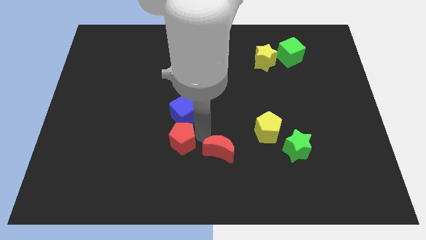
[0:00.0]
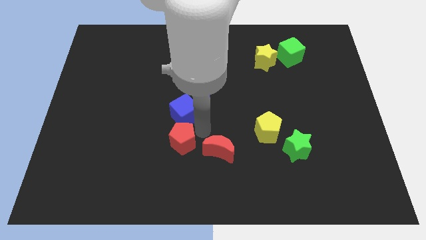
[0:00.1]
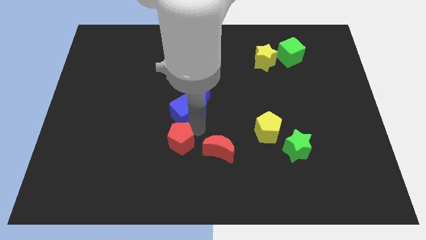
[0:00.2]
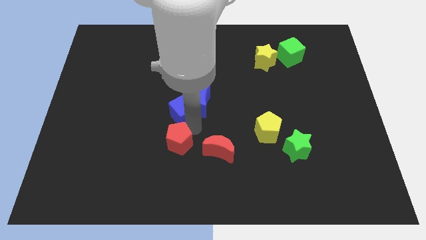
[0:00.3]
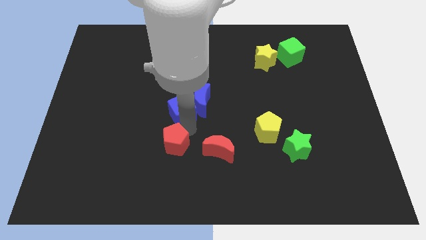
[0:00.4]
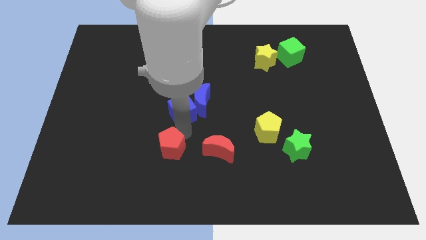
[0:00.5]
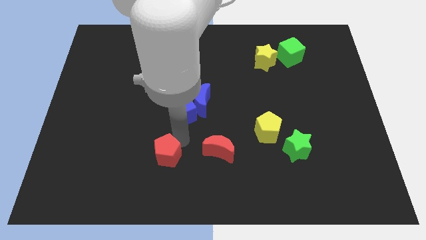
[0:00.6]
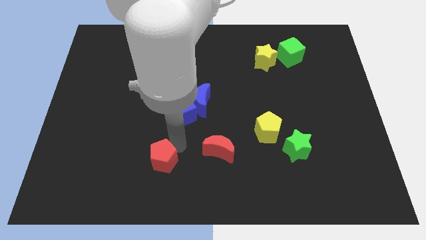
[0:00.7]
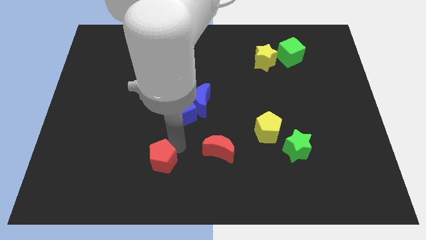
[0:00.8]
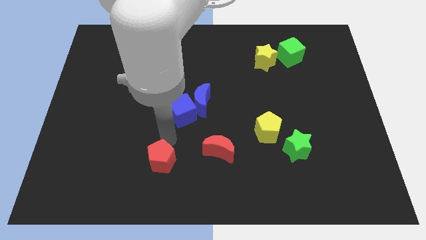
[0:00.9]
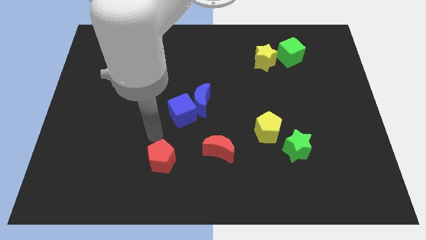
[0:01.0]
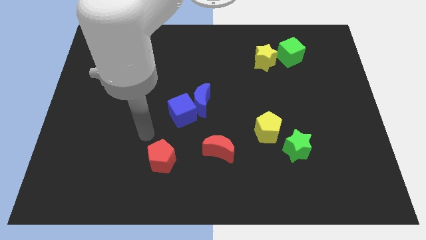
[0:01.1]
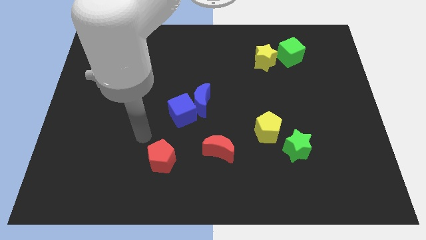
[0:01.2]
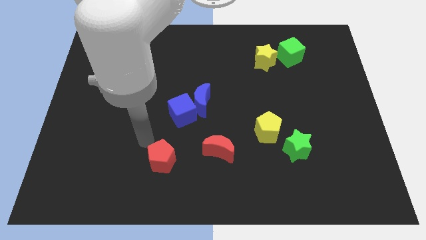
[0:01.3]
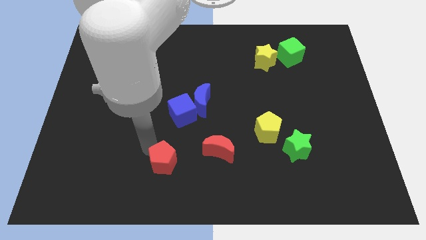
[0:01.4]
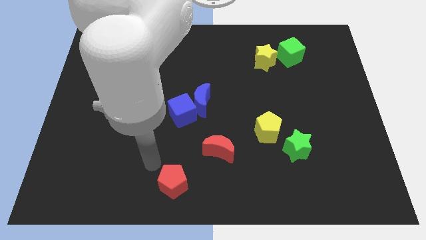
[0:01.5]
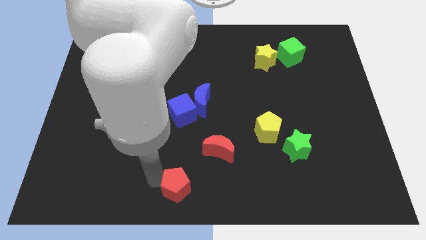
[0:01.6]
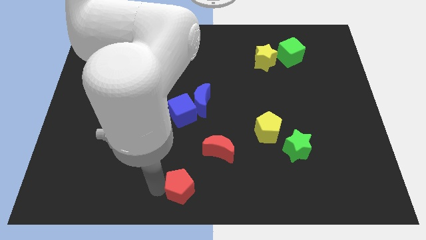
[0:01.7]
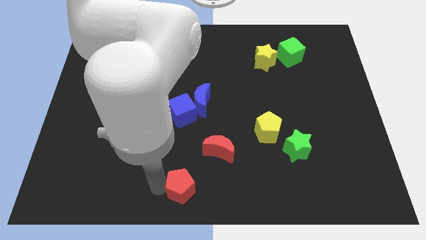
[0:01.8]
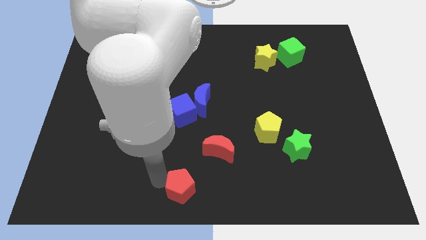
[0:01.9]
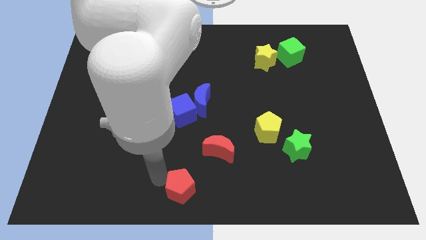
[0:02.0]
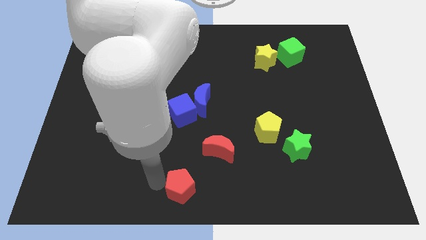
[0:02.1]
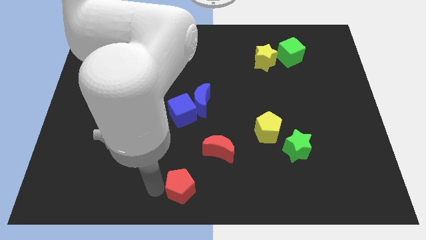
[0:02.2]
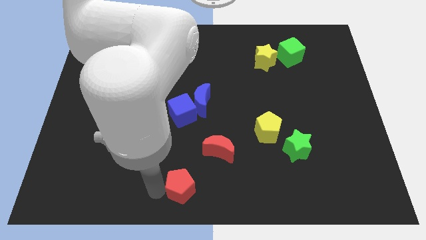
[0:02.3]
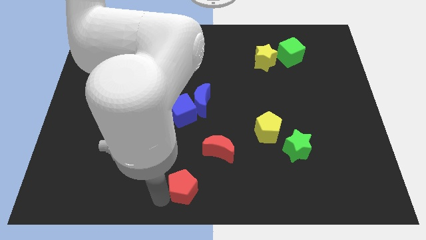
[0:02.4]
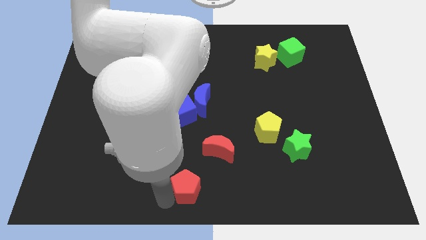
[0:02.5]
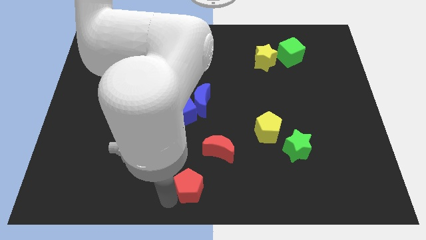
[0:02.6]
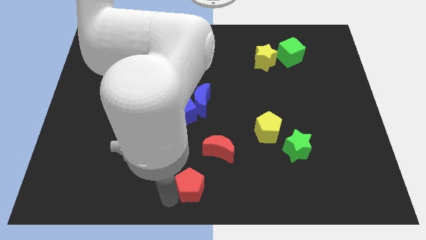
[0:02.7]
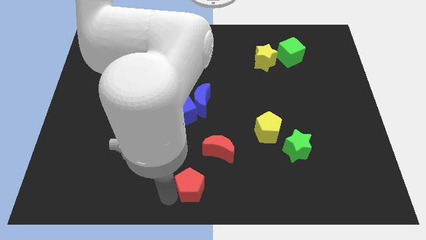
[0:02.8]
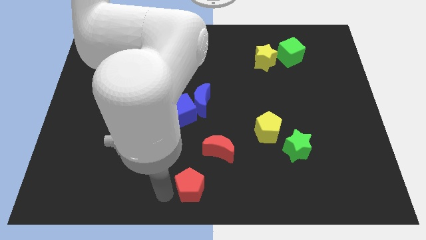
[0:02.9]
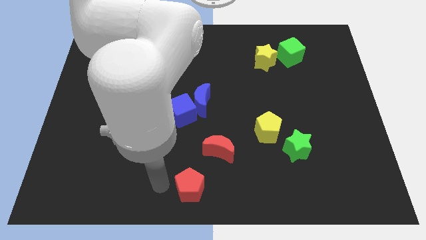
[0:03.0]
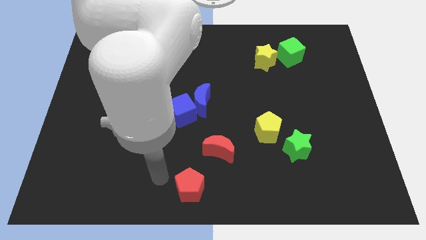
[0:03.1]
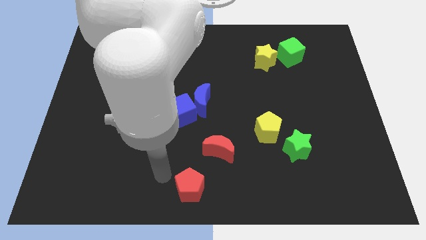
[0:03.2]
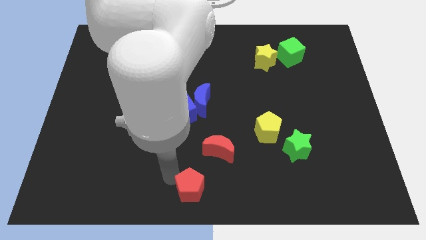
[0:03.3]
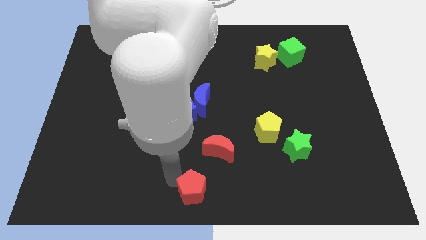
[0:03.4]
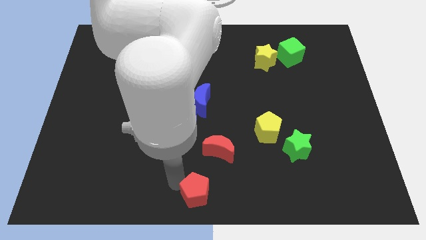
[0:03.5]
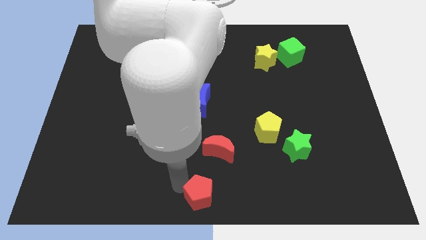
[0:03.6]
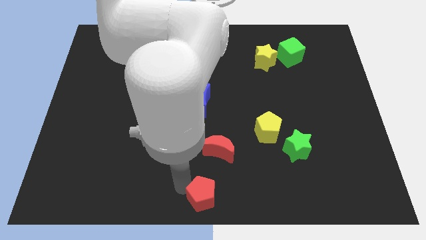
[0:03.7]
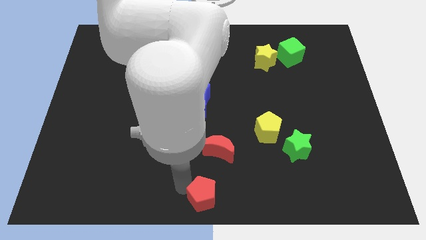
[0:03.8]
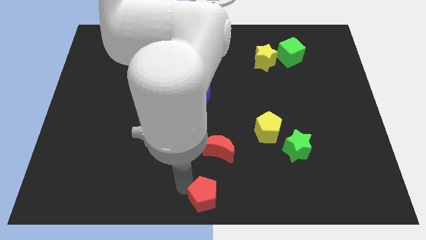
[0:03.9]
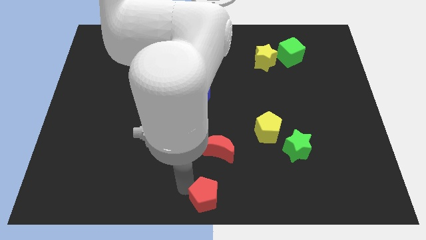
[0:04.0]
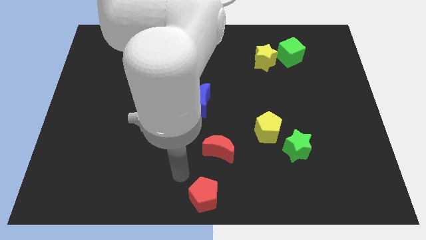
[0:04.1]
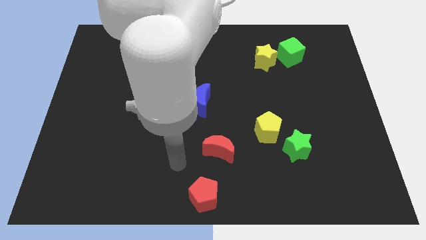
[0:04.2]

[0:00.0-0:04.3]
move the red pentagon to the bottom center

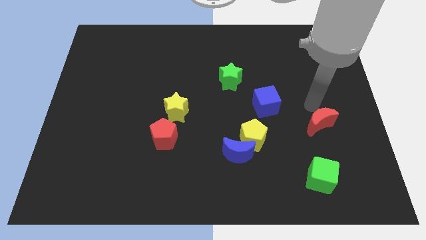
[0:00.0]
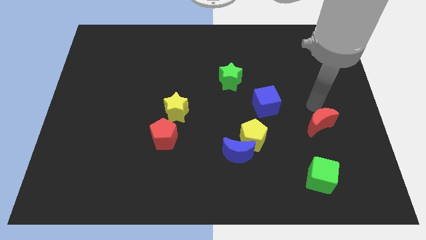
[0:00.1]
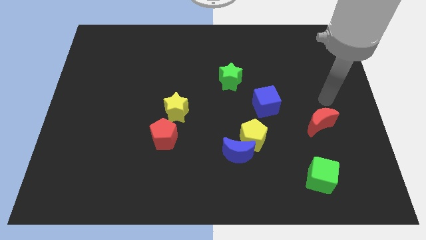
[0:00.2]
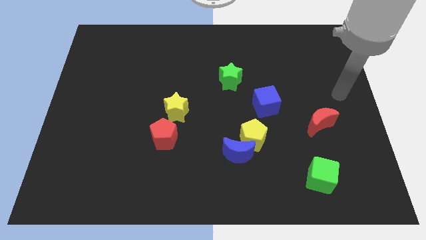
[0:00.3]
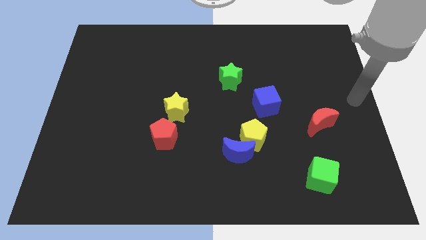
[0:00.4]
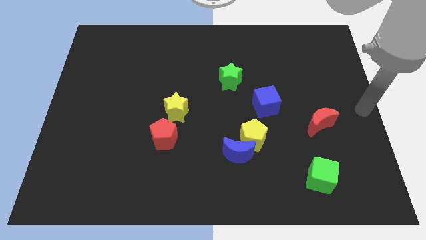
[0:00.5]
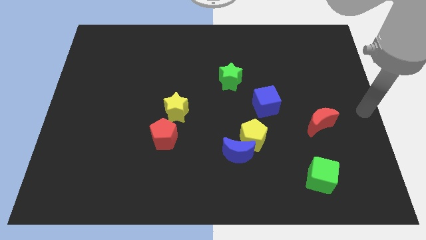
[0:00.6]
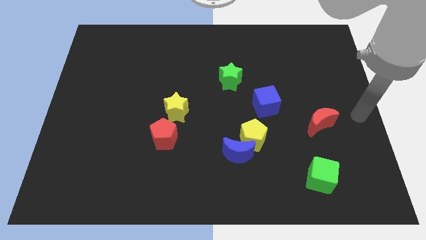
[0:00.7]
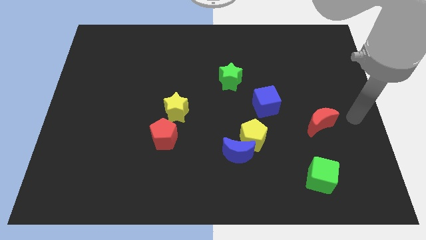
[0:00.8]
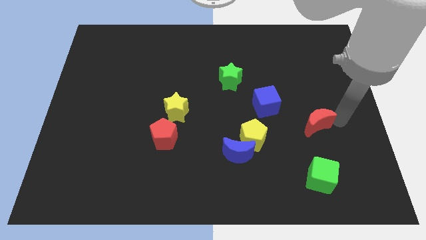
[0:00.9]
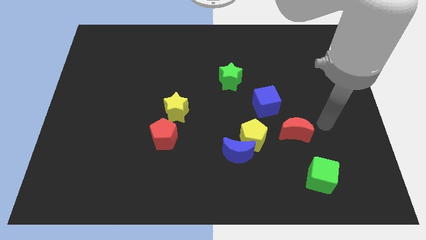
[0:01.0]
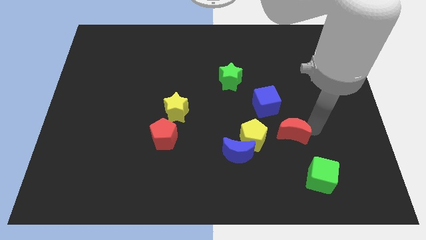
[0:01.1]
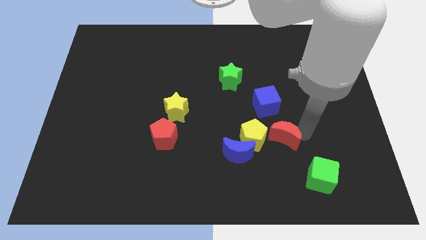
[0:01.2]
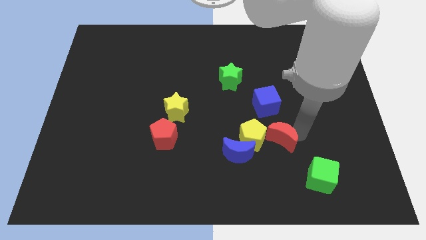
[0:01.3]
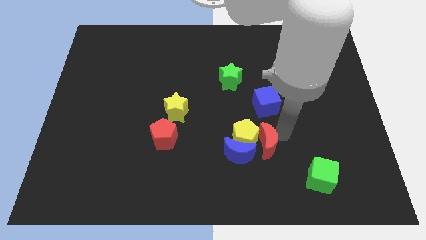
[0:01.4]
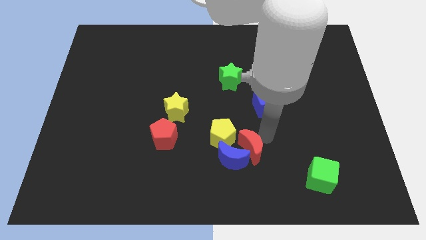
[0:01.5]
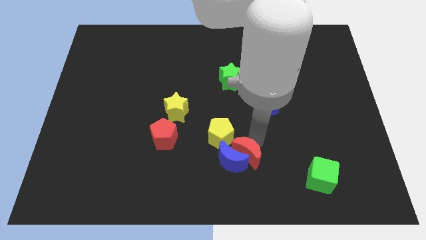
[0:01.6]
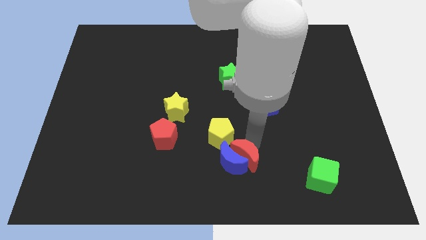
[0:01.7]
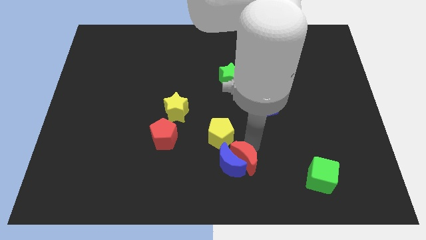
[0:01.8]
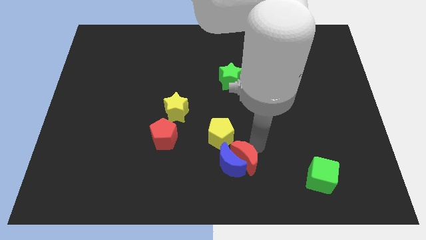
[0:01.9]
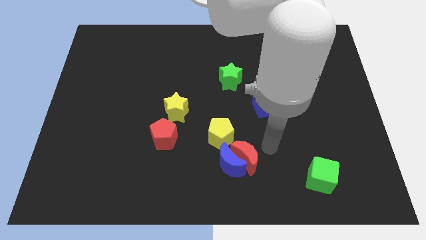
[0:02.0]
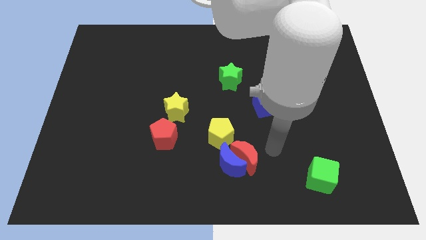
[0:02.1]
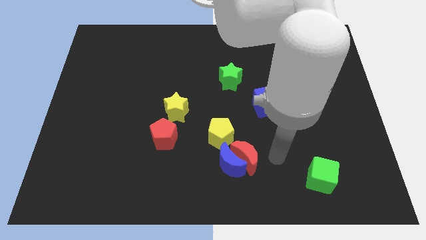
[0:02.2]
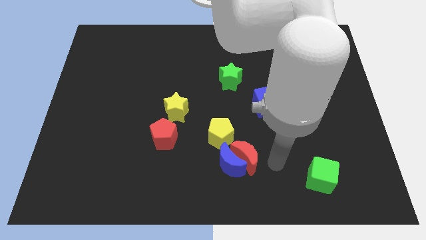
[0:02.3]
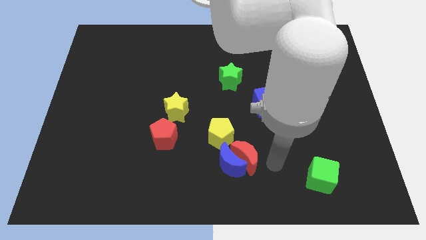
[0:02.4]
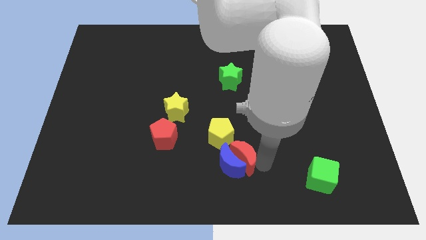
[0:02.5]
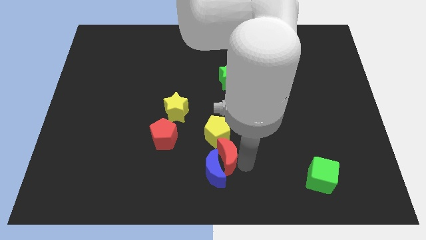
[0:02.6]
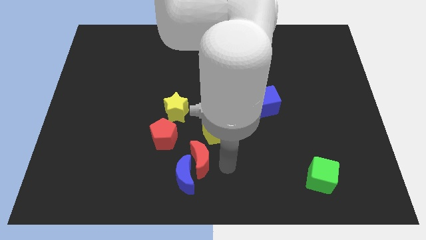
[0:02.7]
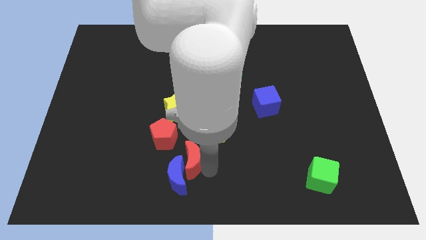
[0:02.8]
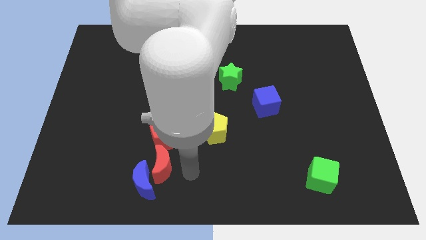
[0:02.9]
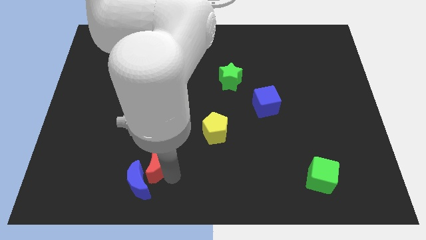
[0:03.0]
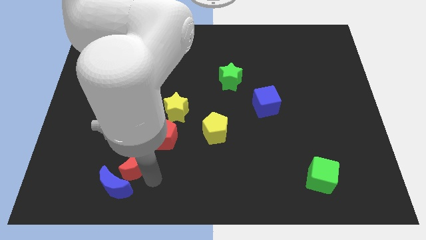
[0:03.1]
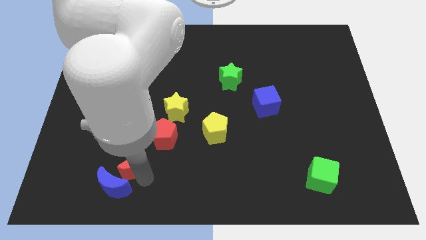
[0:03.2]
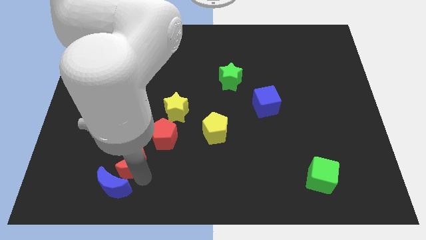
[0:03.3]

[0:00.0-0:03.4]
push the red moon and blue moon to the left side

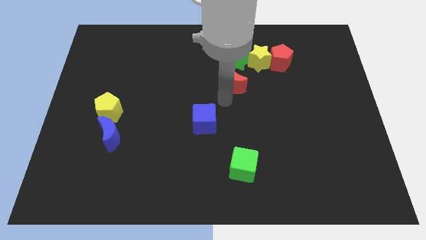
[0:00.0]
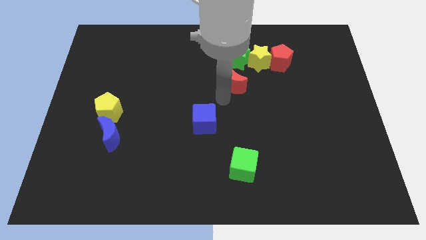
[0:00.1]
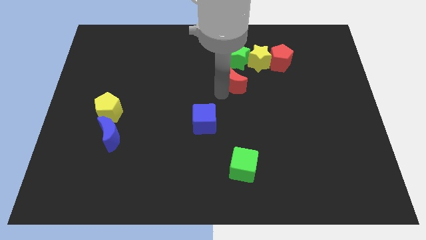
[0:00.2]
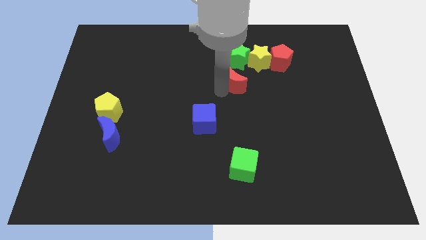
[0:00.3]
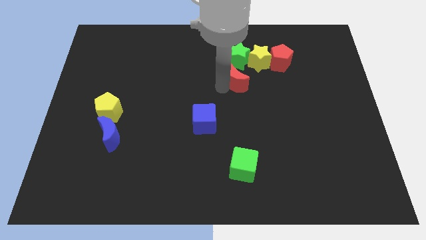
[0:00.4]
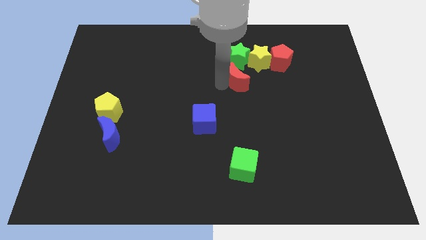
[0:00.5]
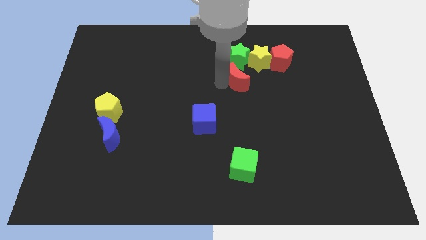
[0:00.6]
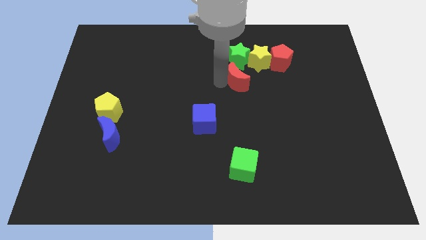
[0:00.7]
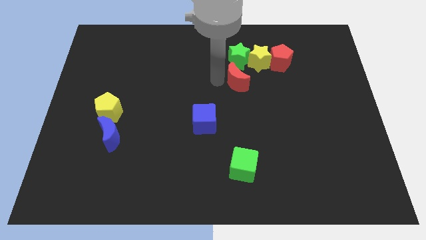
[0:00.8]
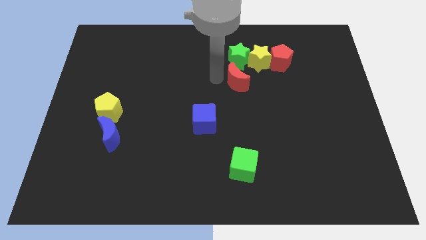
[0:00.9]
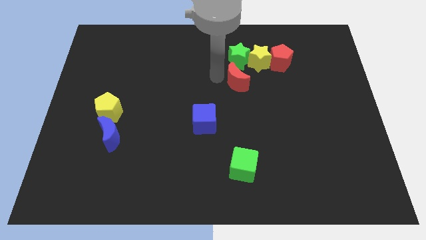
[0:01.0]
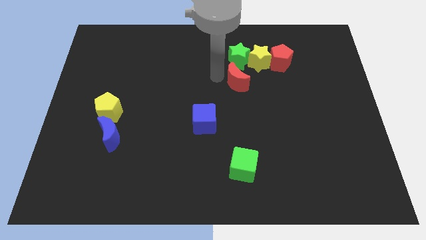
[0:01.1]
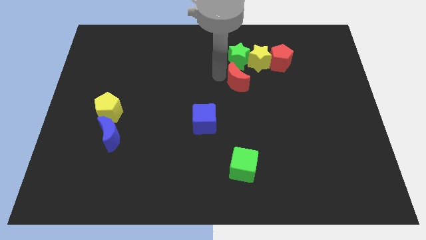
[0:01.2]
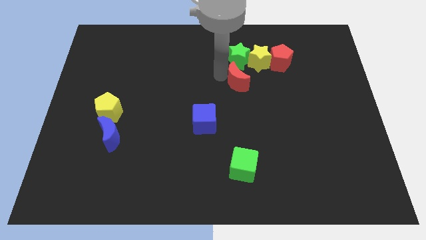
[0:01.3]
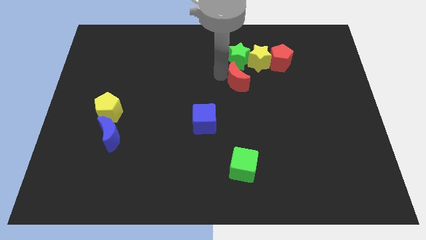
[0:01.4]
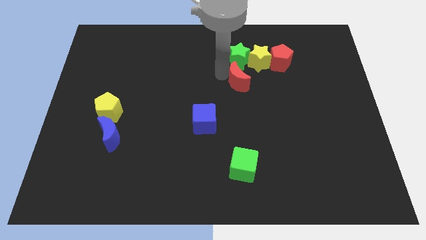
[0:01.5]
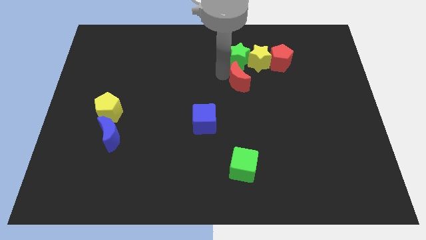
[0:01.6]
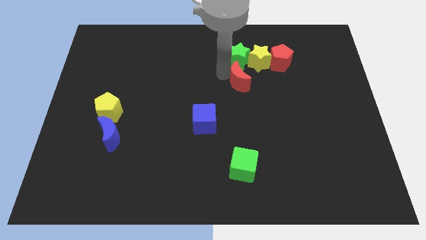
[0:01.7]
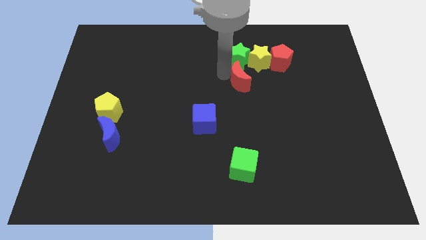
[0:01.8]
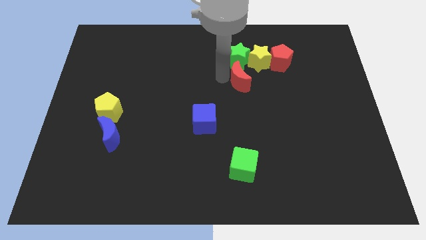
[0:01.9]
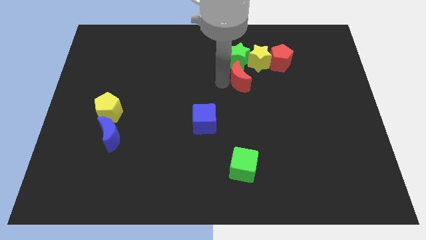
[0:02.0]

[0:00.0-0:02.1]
move red crescent into green star
